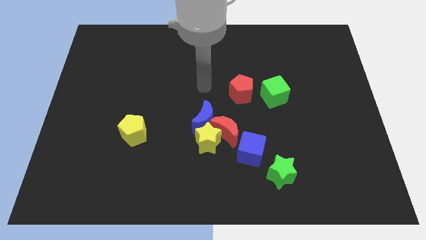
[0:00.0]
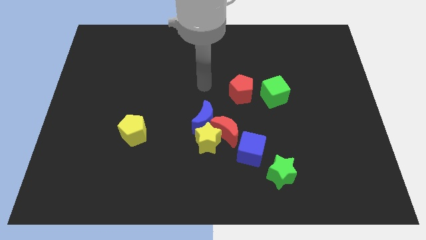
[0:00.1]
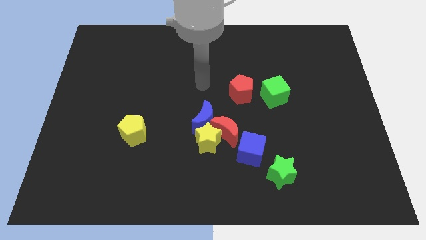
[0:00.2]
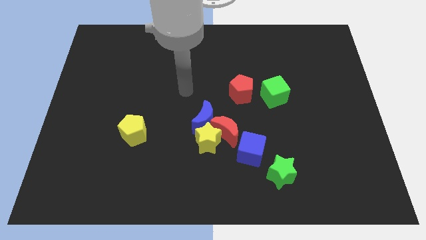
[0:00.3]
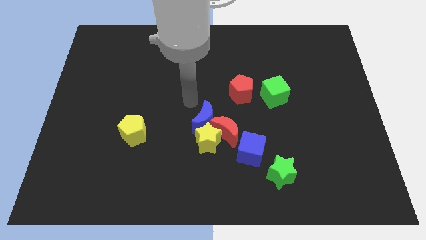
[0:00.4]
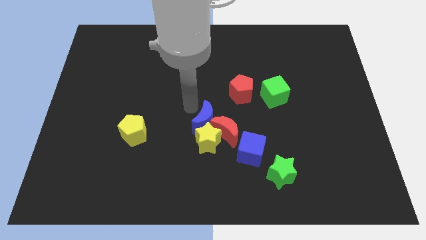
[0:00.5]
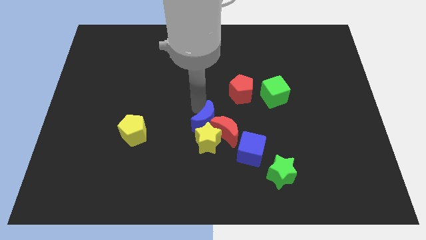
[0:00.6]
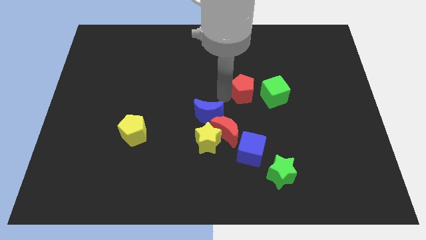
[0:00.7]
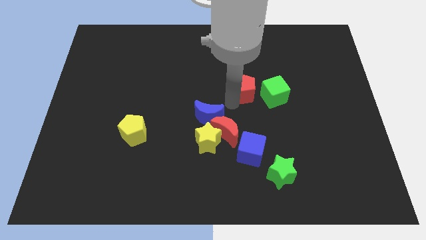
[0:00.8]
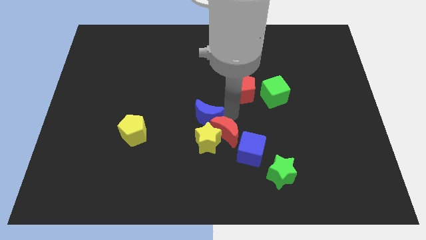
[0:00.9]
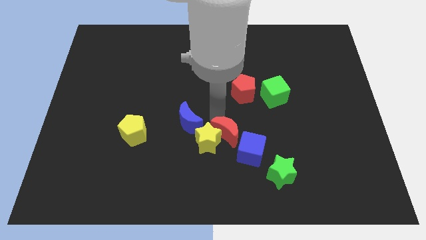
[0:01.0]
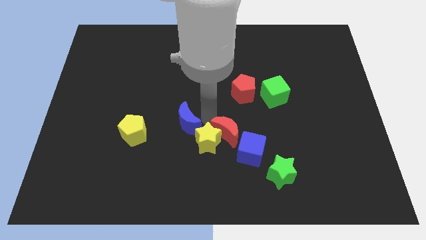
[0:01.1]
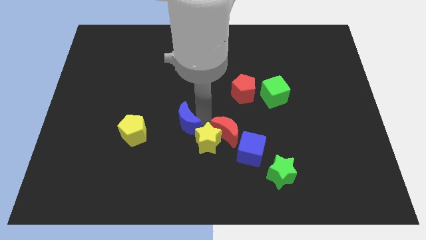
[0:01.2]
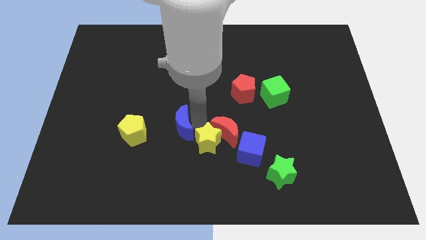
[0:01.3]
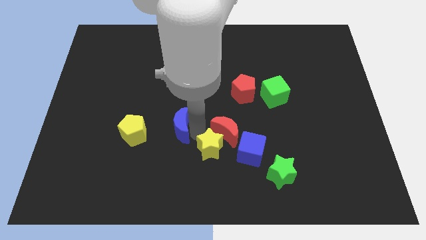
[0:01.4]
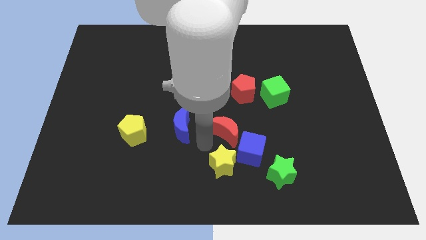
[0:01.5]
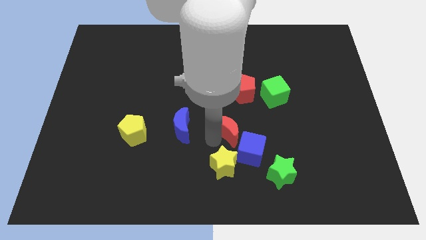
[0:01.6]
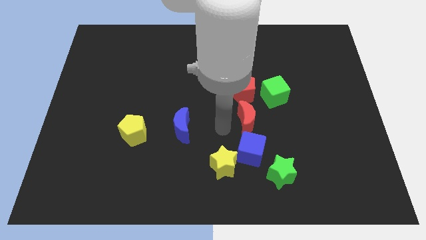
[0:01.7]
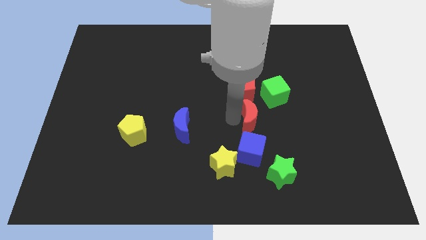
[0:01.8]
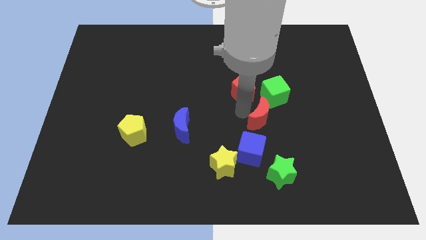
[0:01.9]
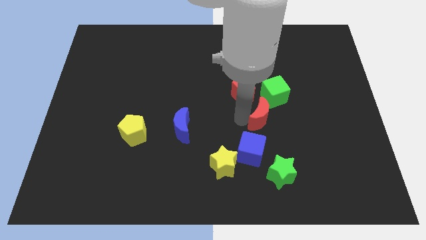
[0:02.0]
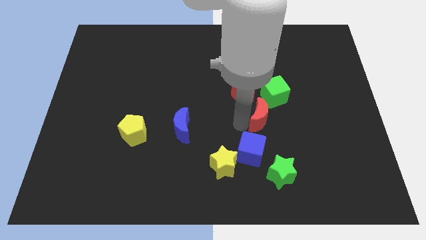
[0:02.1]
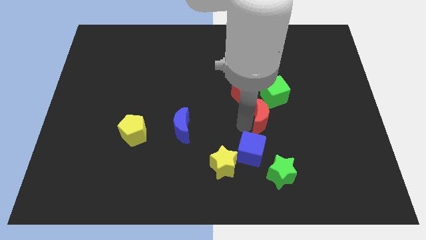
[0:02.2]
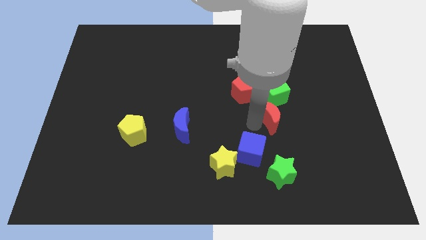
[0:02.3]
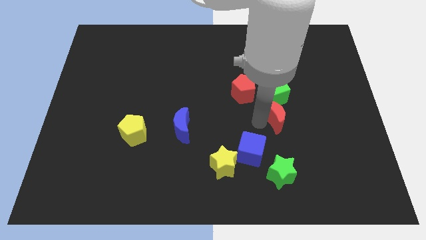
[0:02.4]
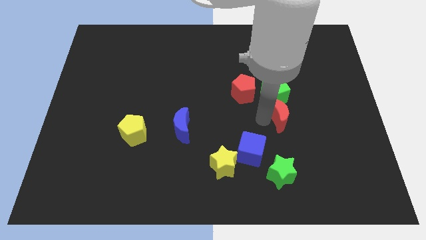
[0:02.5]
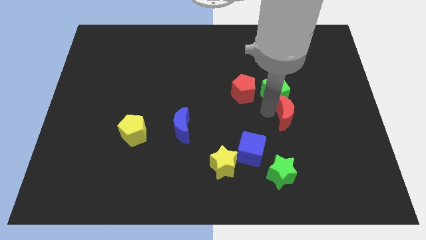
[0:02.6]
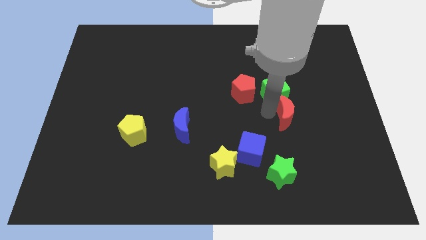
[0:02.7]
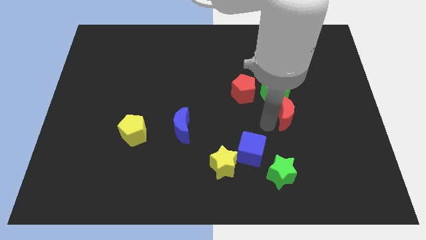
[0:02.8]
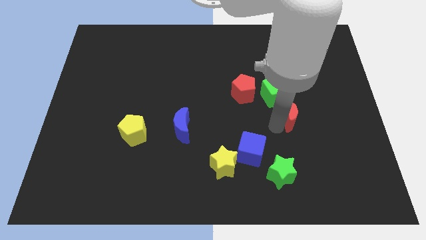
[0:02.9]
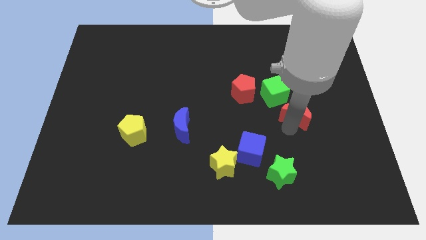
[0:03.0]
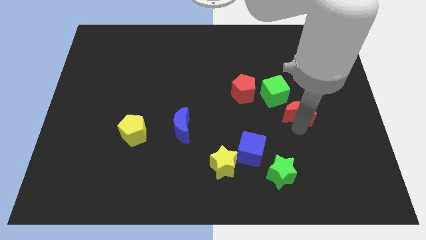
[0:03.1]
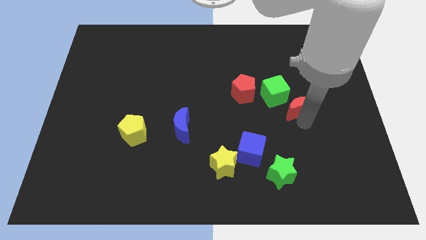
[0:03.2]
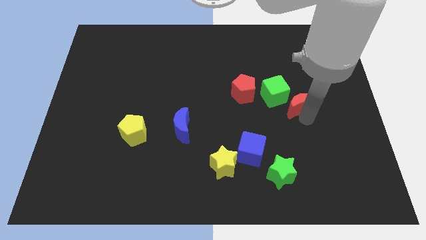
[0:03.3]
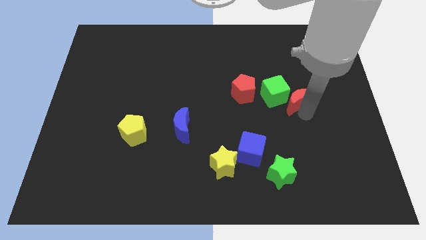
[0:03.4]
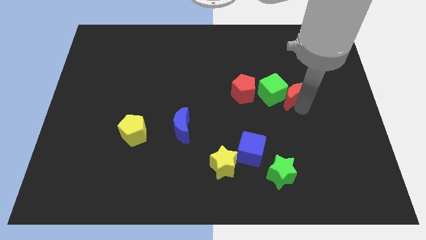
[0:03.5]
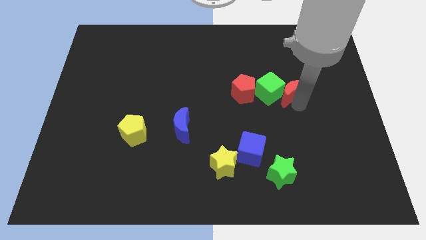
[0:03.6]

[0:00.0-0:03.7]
move the red moon close to the green cube

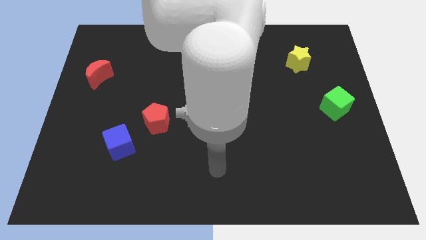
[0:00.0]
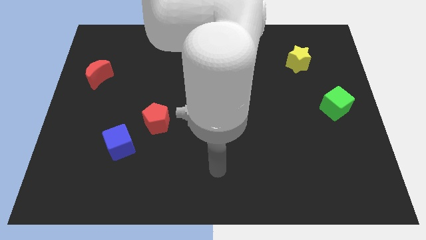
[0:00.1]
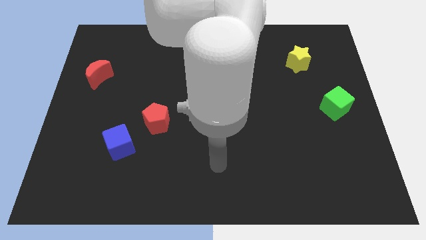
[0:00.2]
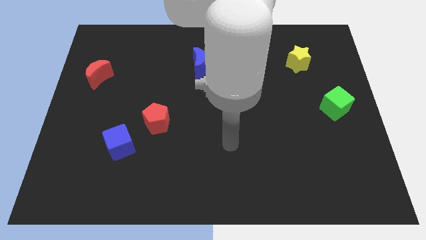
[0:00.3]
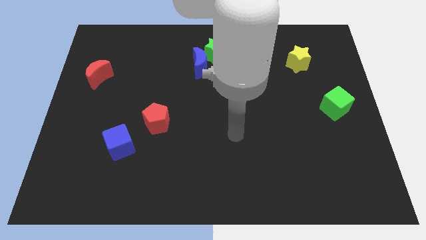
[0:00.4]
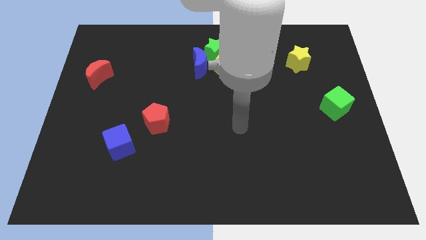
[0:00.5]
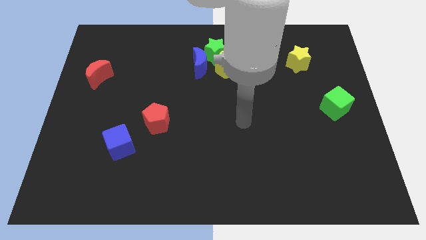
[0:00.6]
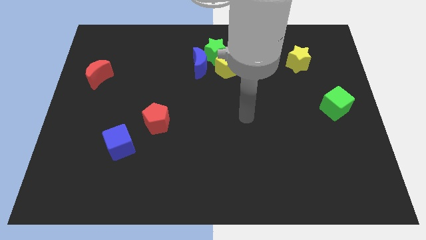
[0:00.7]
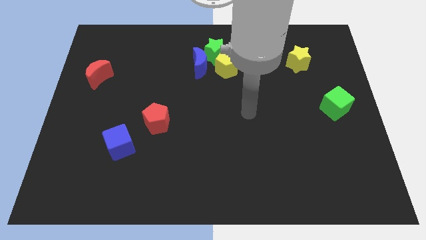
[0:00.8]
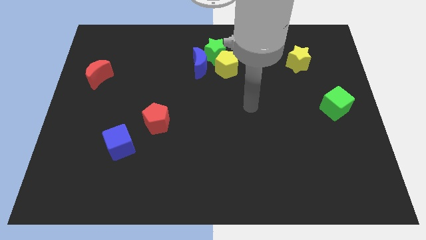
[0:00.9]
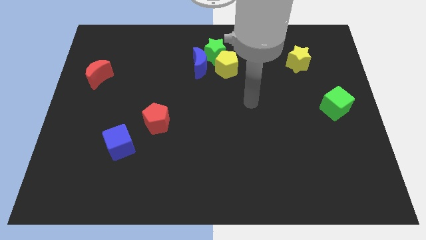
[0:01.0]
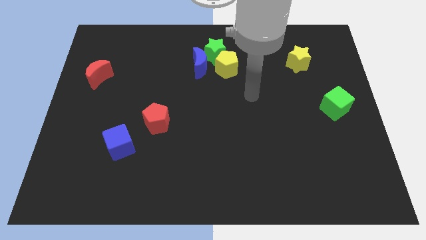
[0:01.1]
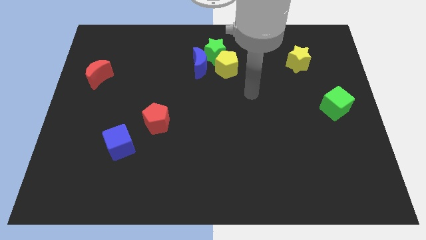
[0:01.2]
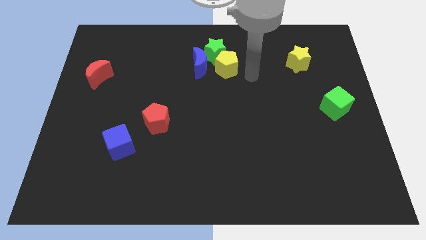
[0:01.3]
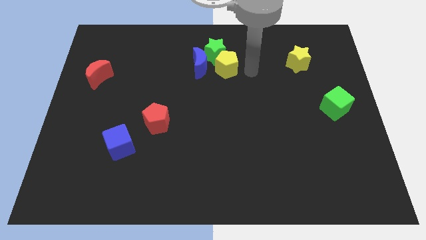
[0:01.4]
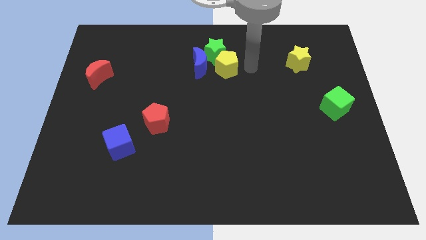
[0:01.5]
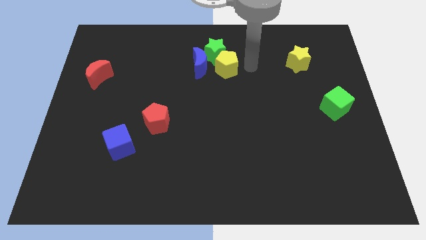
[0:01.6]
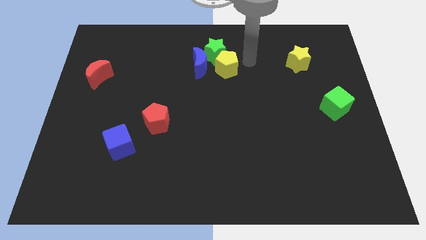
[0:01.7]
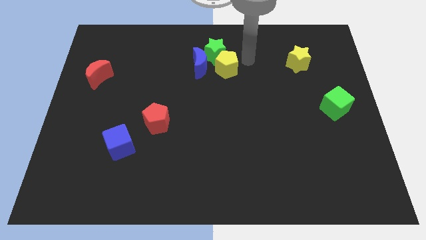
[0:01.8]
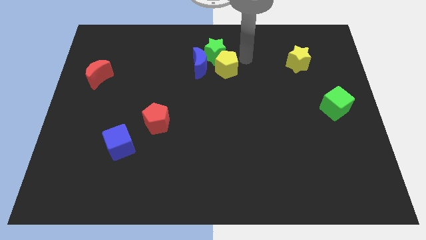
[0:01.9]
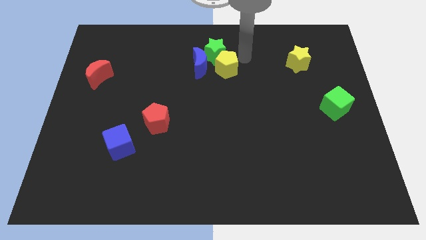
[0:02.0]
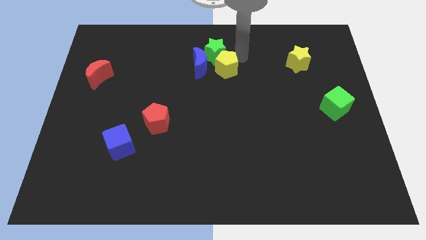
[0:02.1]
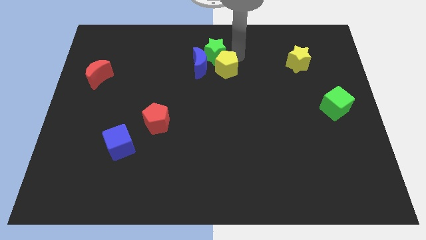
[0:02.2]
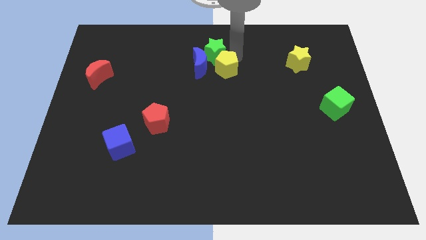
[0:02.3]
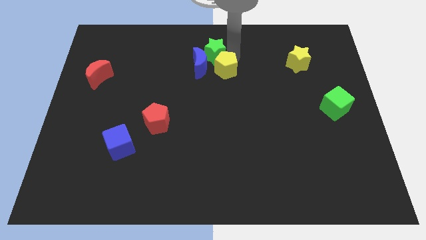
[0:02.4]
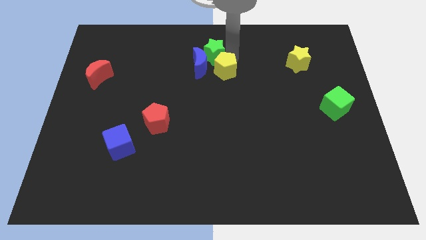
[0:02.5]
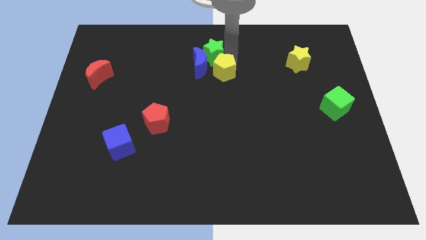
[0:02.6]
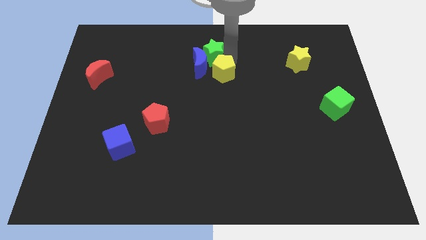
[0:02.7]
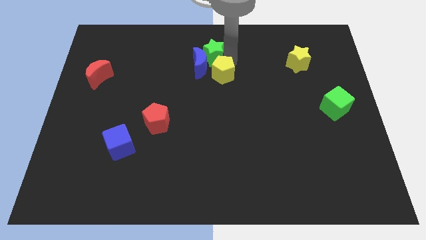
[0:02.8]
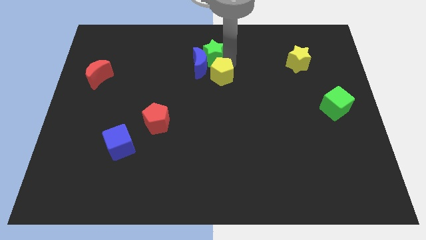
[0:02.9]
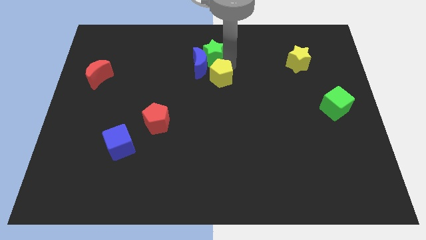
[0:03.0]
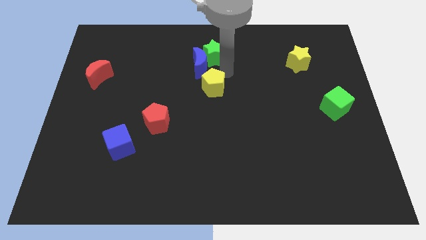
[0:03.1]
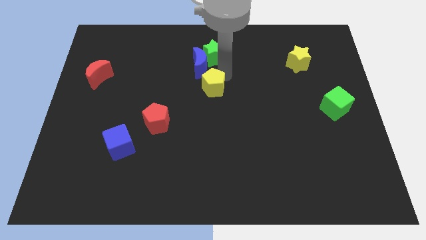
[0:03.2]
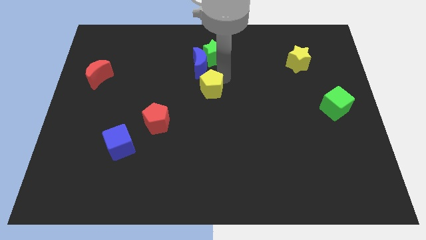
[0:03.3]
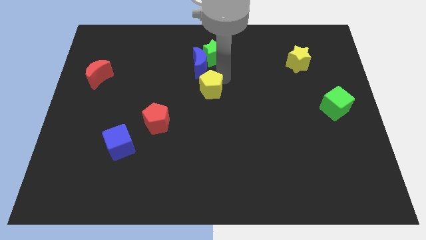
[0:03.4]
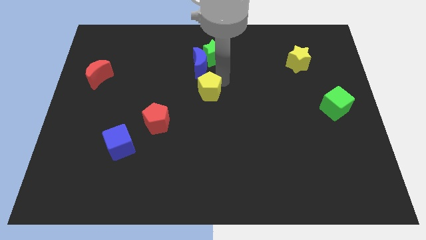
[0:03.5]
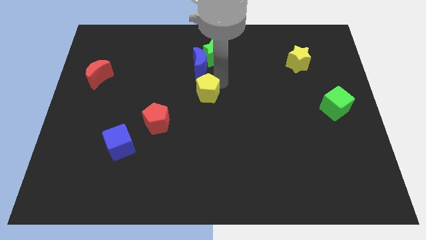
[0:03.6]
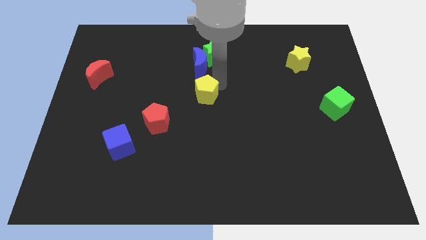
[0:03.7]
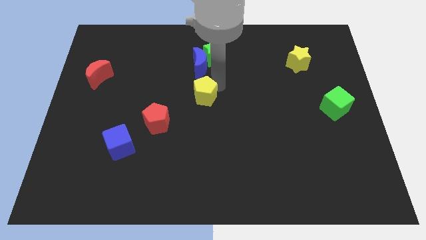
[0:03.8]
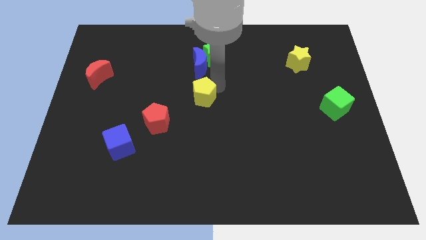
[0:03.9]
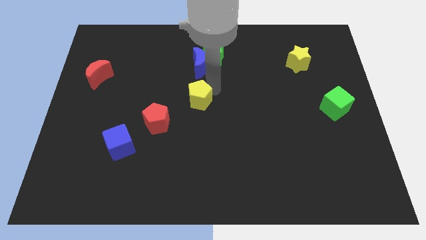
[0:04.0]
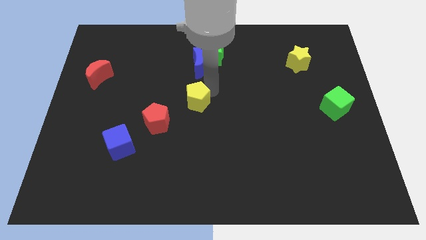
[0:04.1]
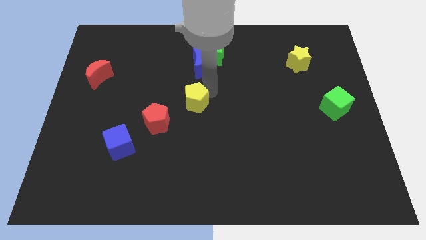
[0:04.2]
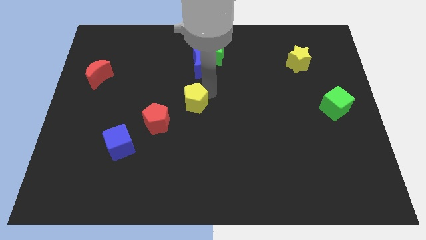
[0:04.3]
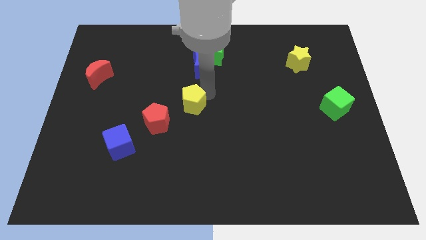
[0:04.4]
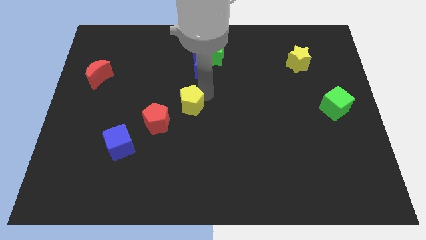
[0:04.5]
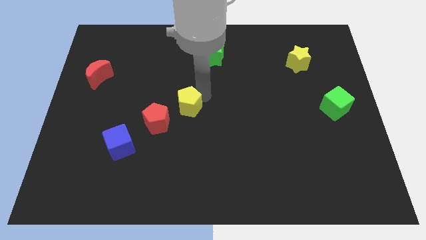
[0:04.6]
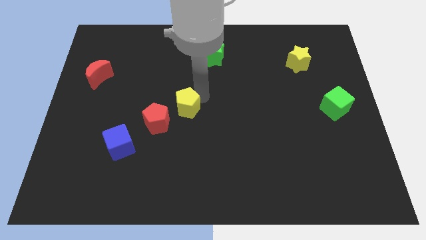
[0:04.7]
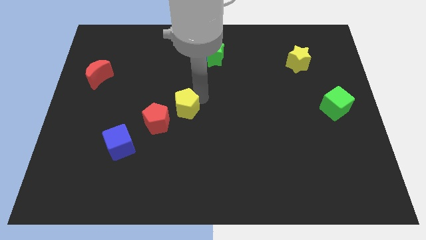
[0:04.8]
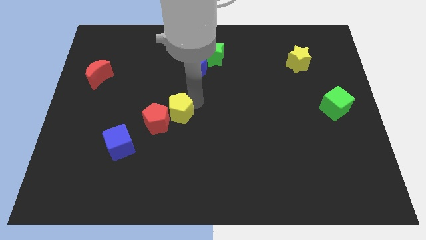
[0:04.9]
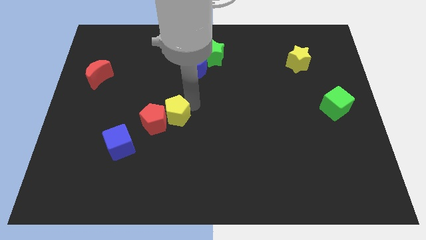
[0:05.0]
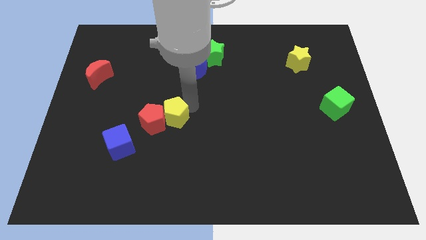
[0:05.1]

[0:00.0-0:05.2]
push the yellow pentagon to the red pentagon
